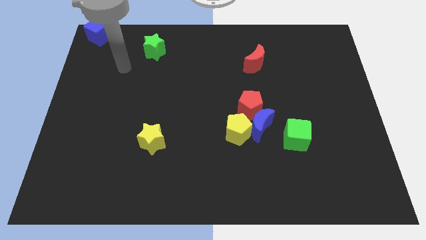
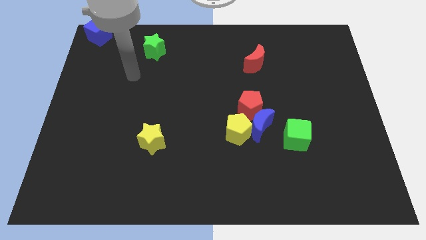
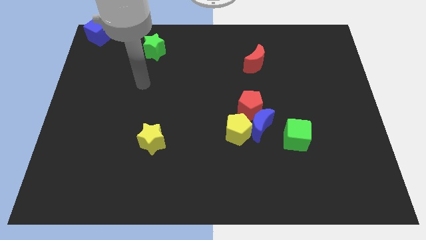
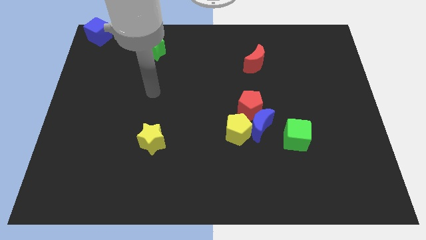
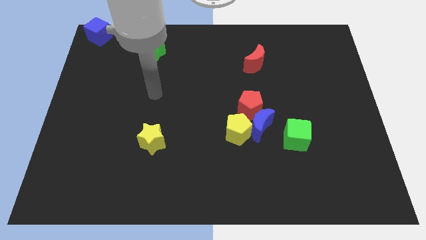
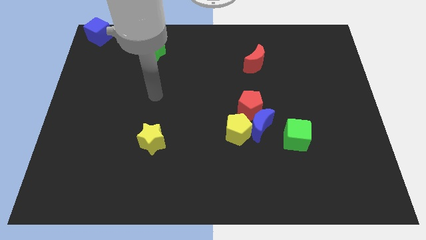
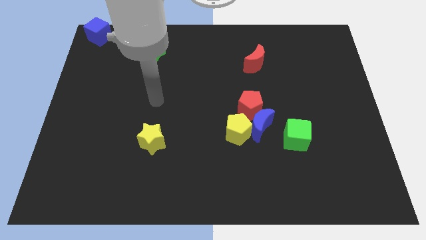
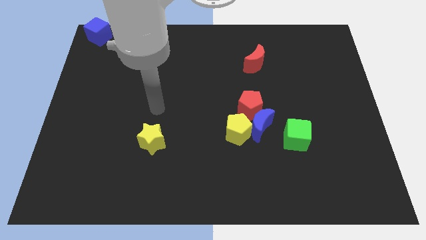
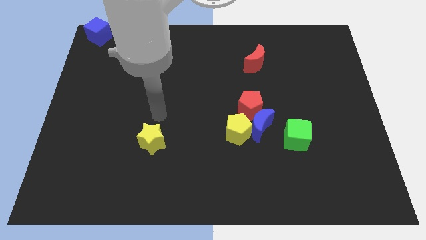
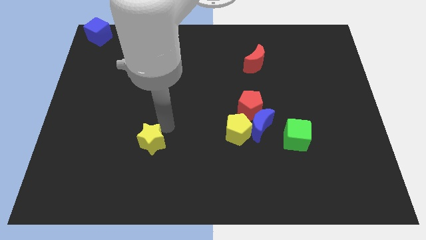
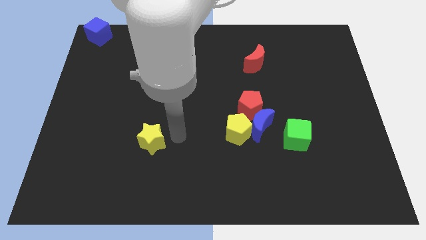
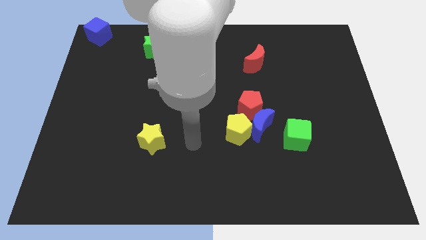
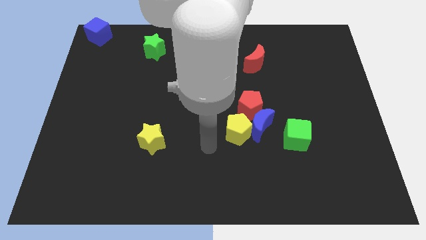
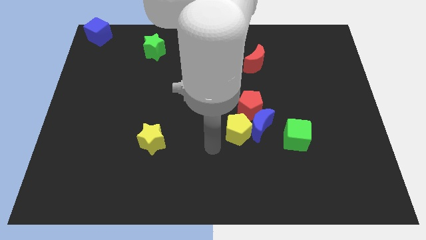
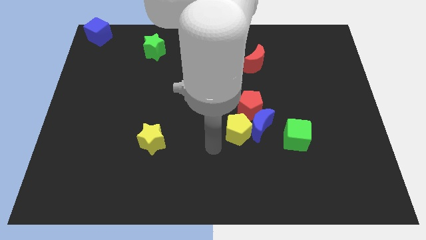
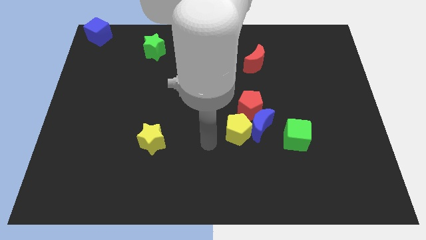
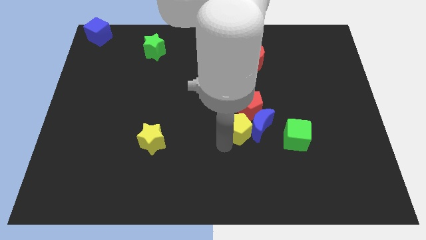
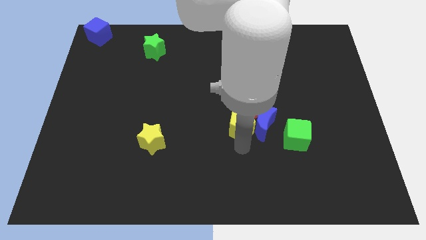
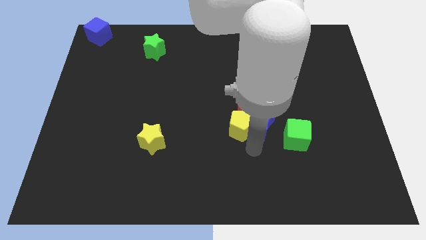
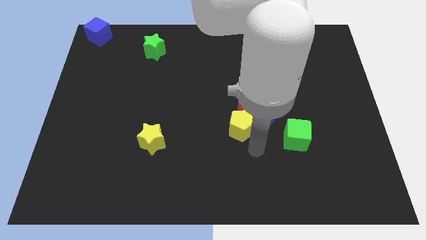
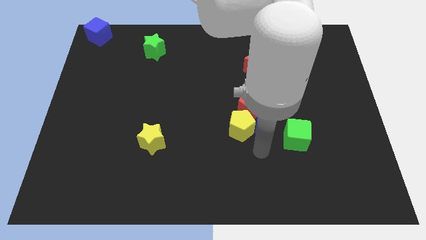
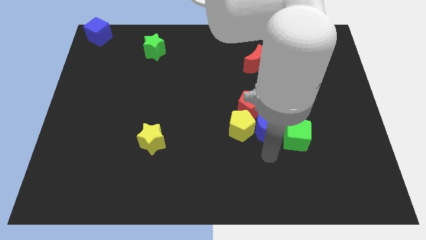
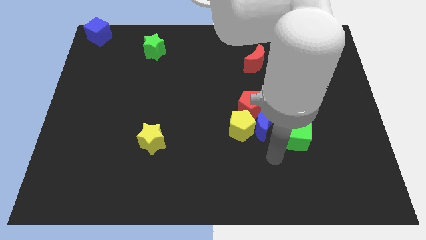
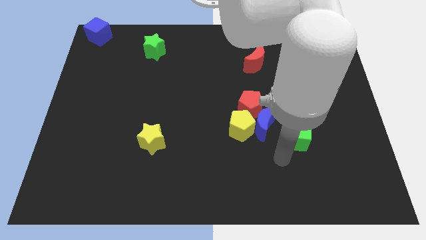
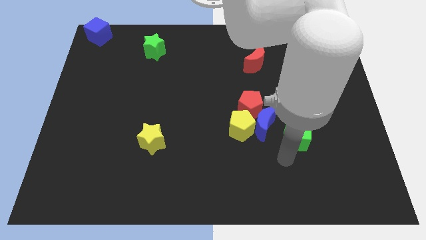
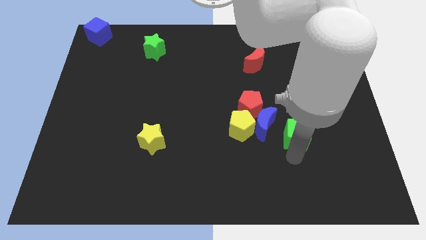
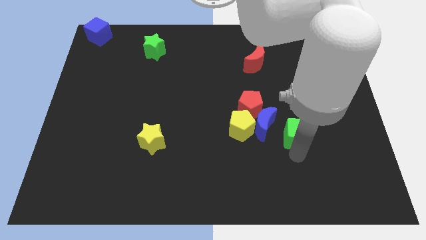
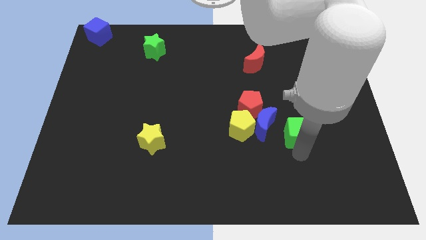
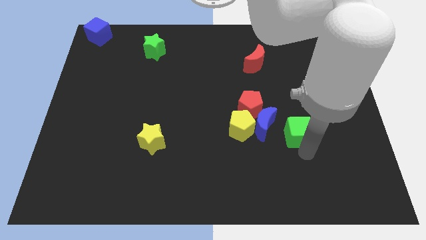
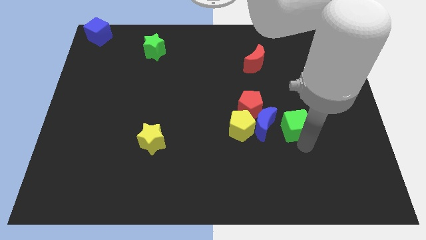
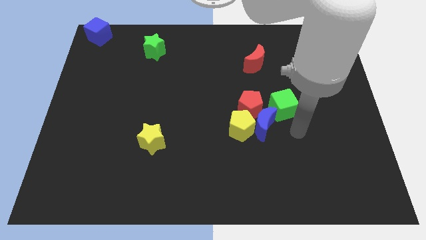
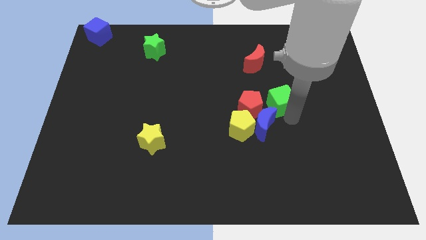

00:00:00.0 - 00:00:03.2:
push the green cube to the right of the red pentagon

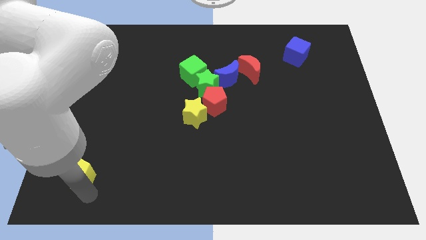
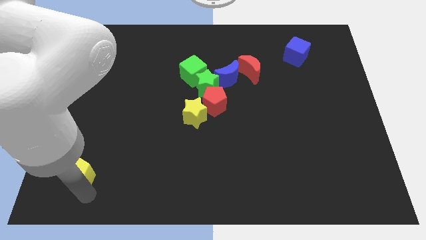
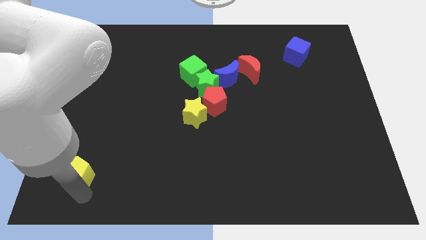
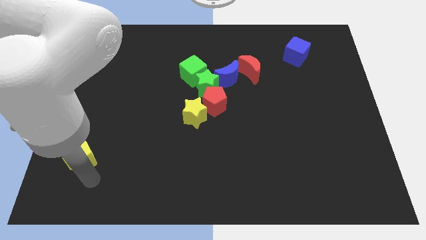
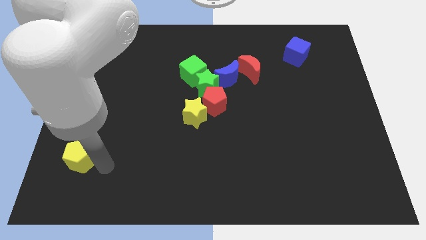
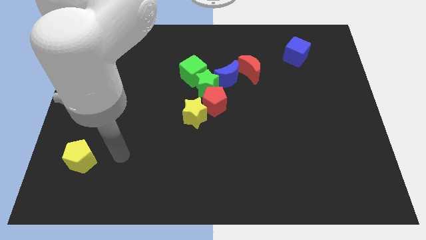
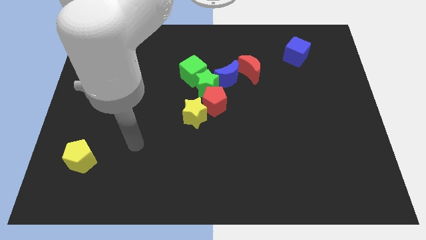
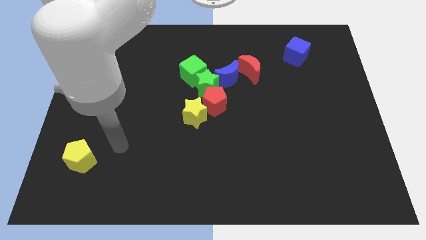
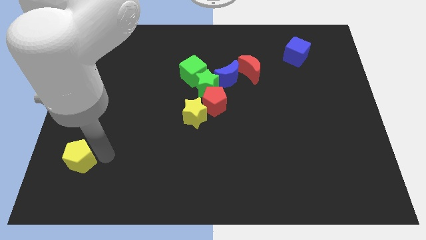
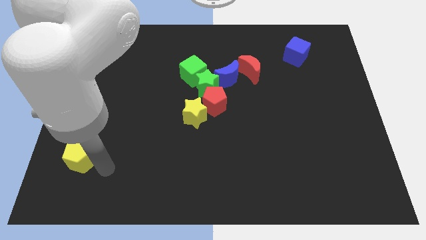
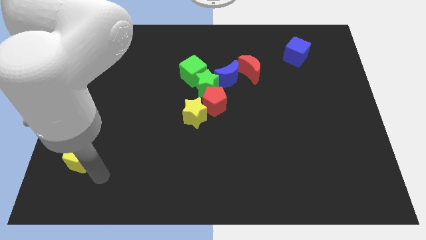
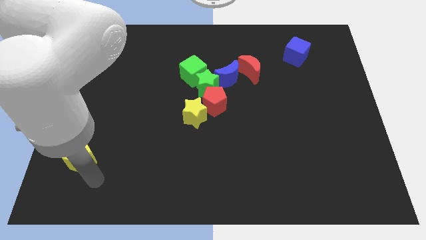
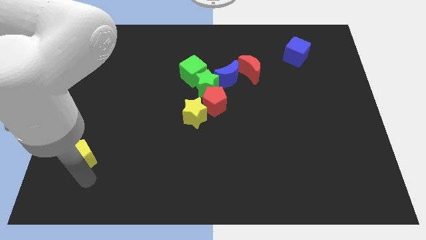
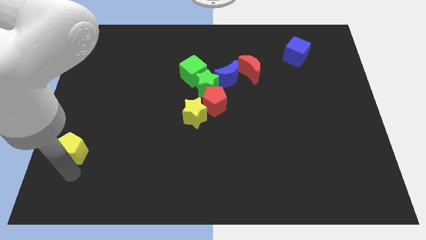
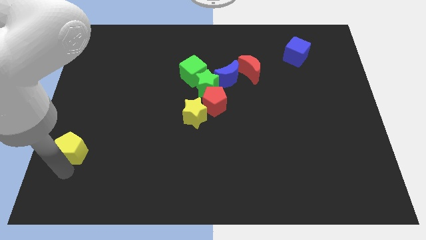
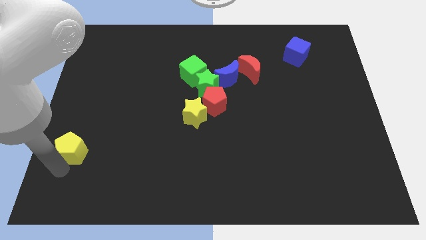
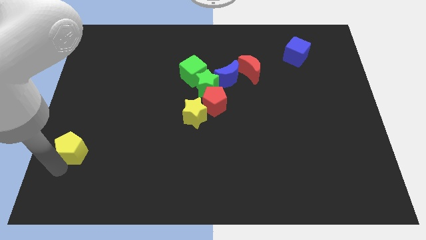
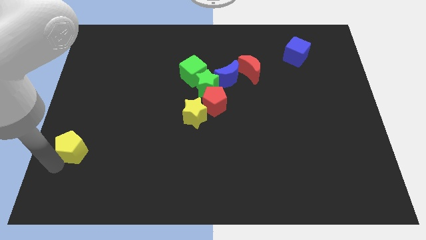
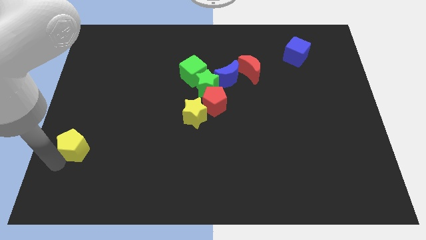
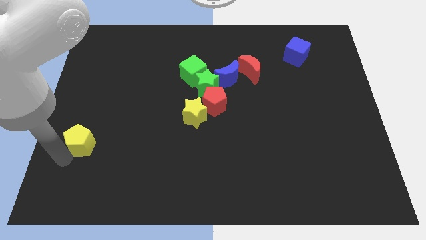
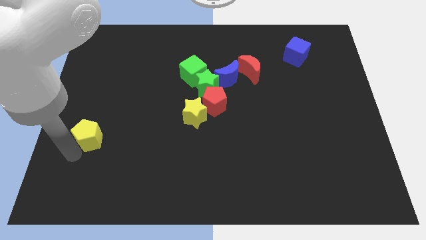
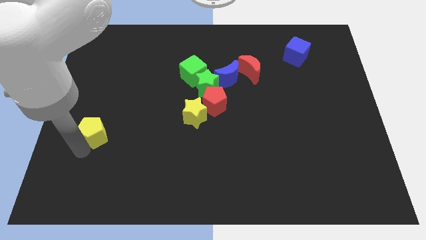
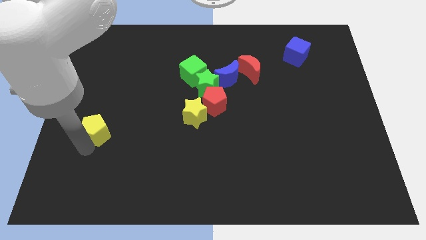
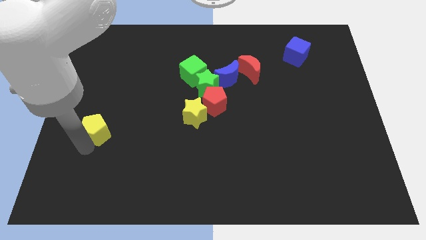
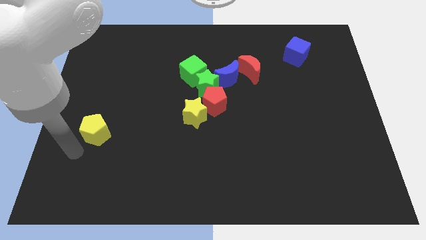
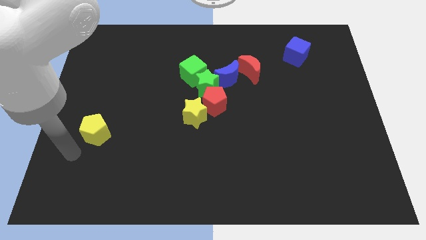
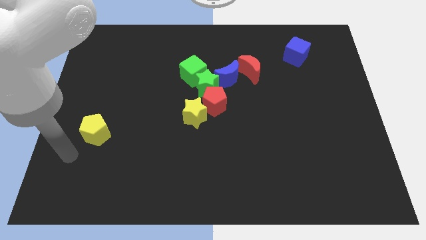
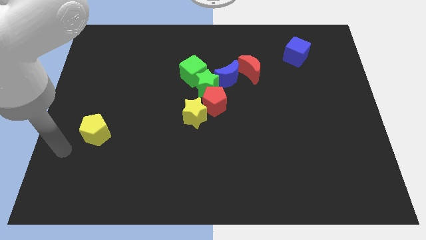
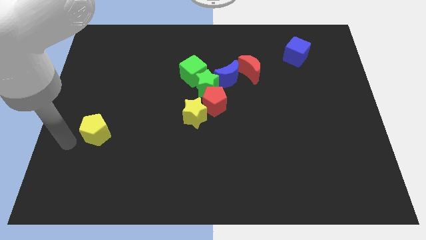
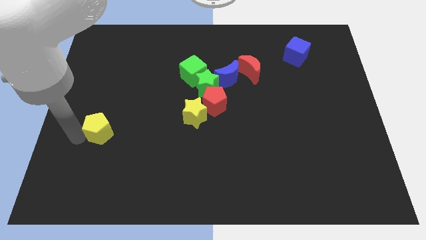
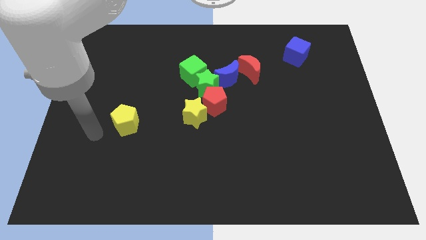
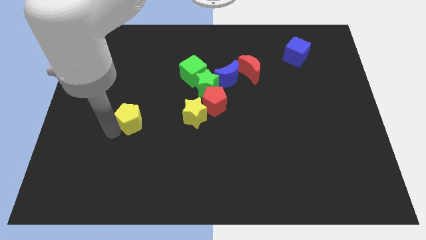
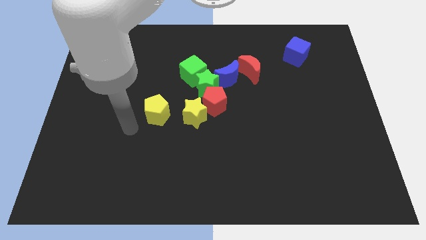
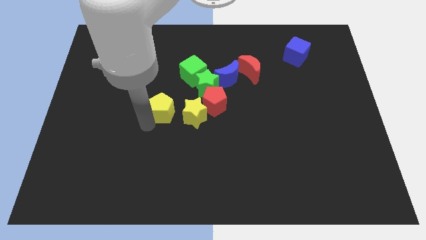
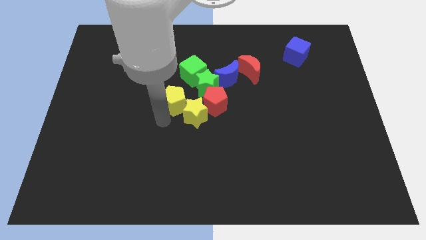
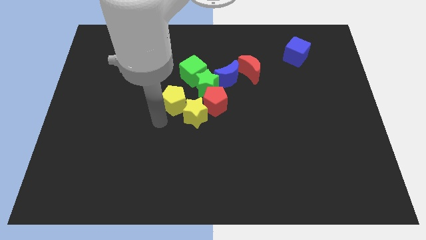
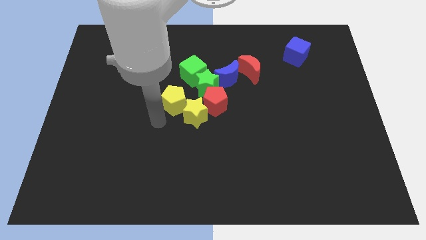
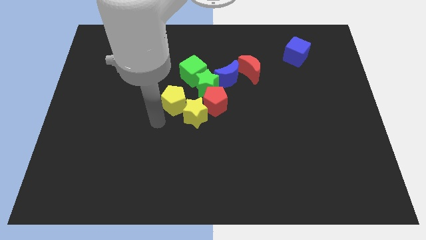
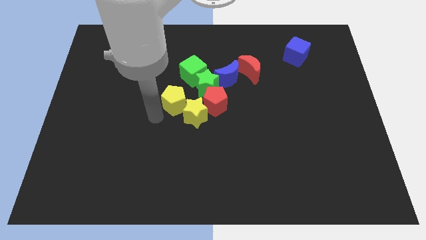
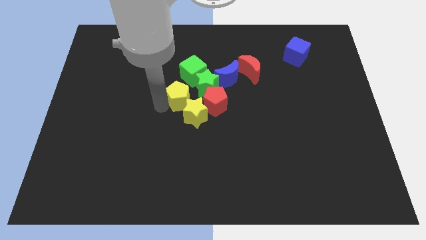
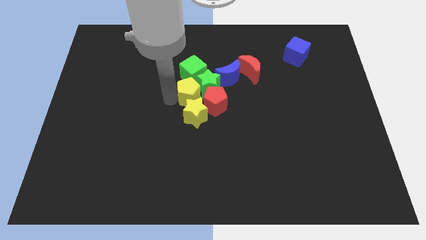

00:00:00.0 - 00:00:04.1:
place the yellow pentagon beside the green star

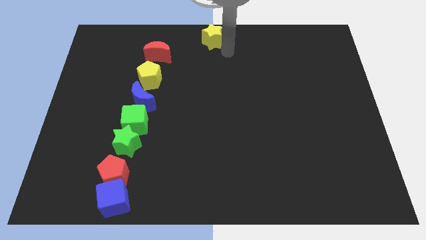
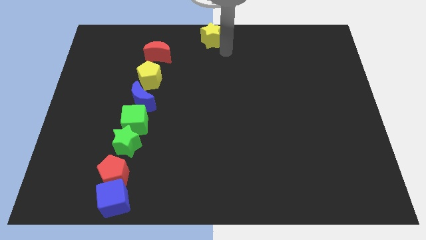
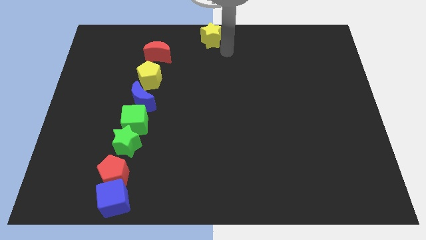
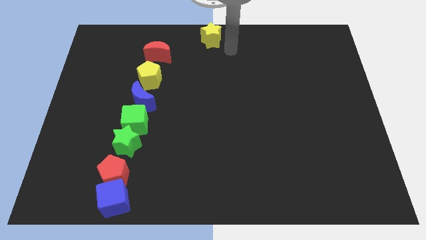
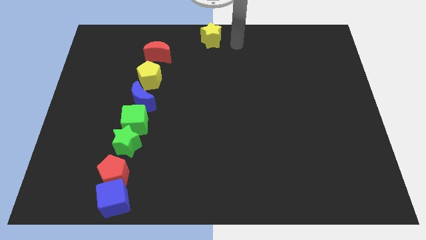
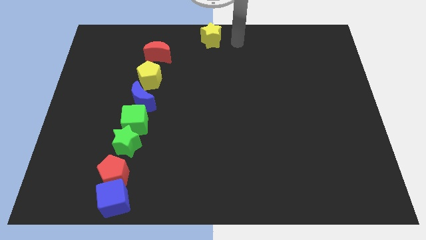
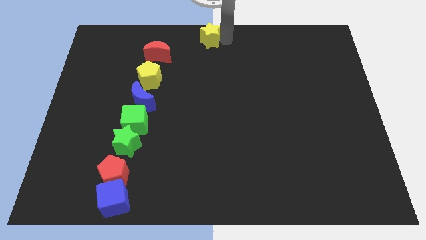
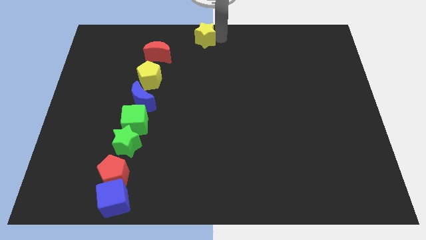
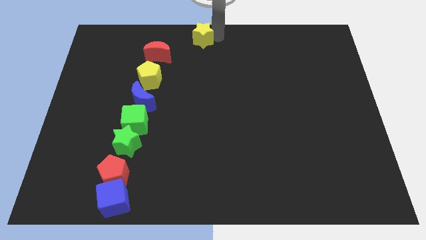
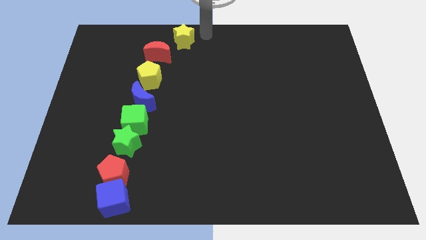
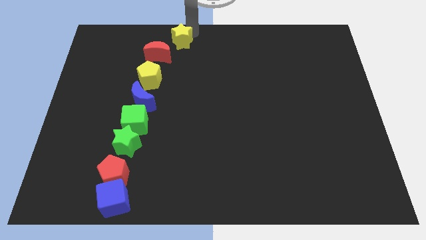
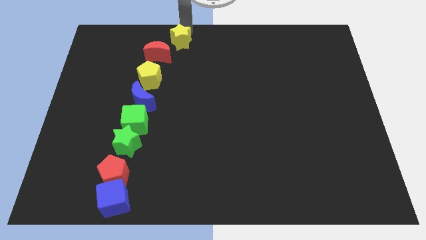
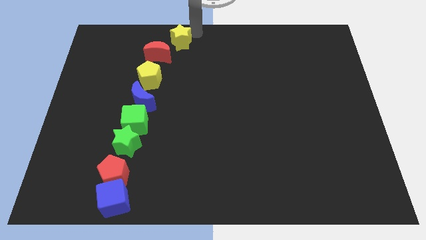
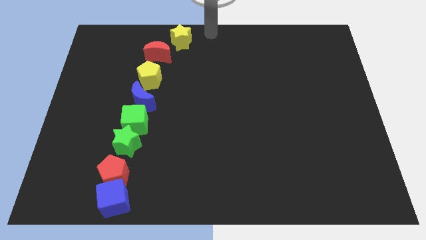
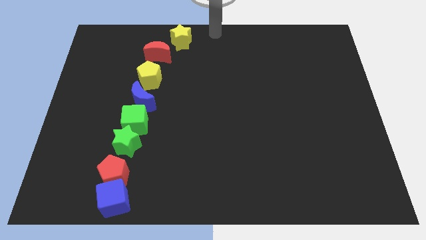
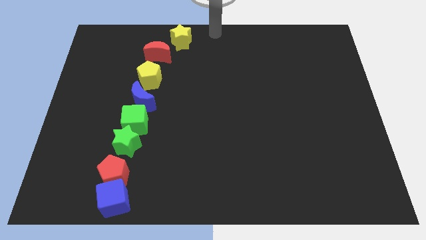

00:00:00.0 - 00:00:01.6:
move the yellow star to the top right of the red crescent
